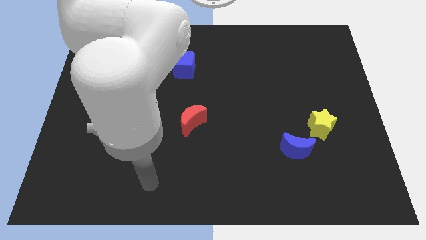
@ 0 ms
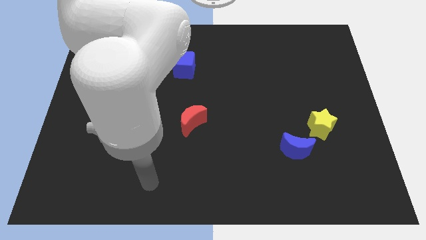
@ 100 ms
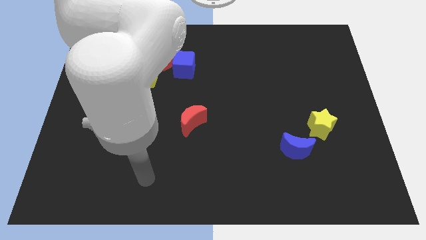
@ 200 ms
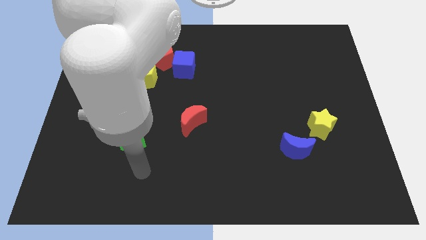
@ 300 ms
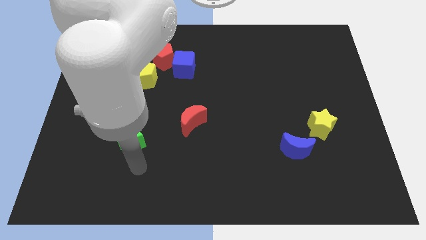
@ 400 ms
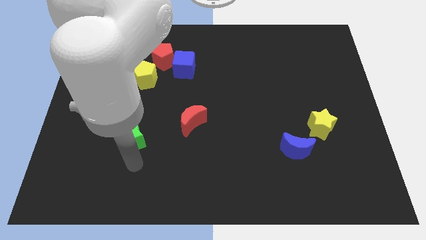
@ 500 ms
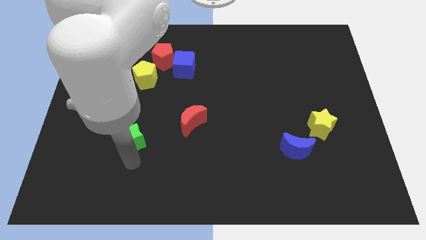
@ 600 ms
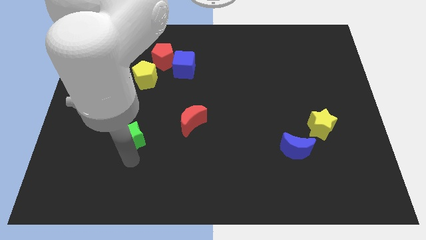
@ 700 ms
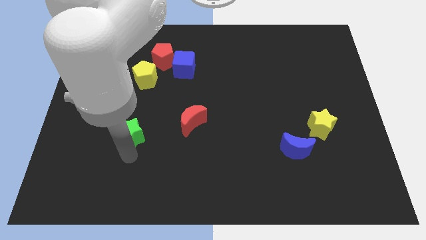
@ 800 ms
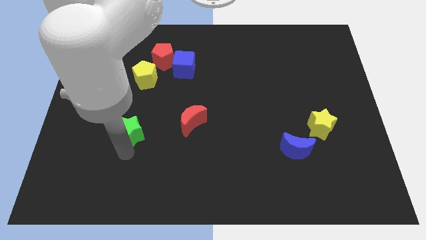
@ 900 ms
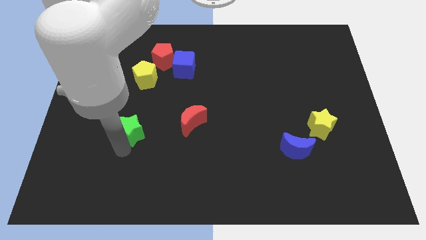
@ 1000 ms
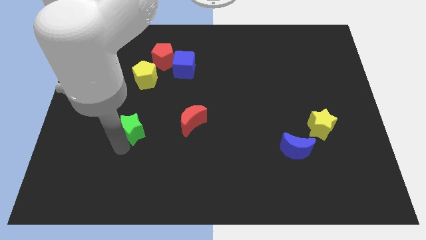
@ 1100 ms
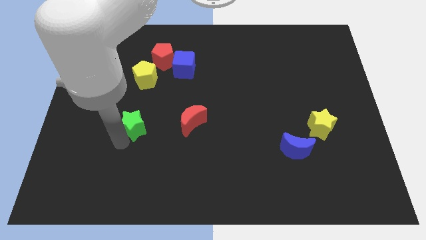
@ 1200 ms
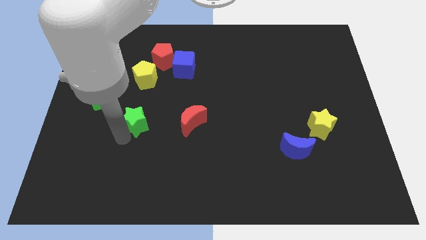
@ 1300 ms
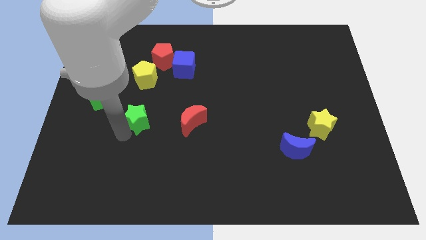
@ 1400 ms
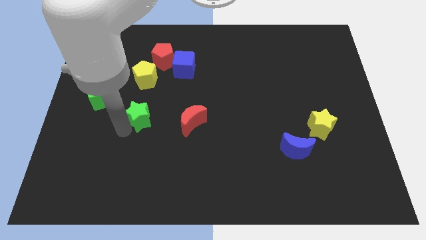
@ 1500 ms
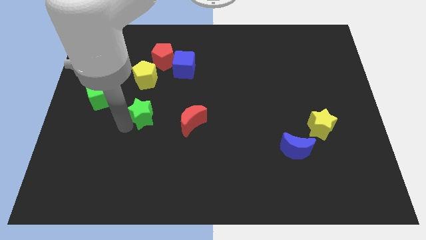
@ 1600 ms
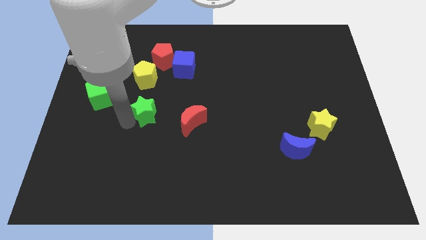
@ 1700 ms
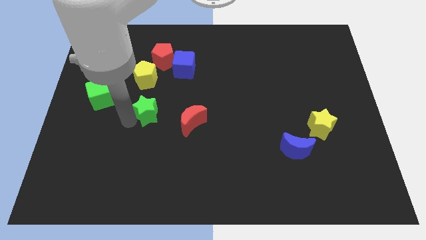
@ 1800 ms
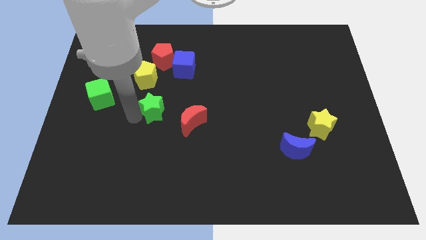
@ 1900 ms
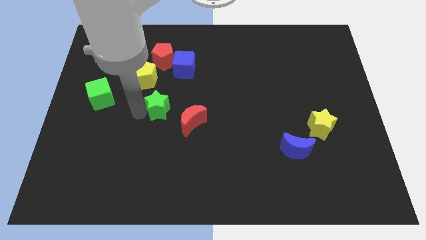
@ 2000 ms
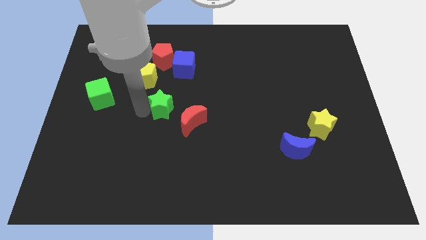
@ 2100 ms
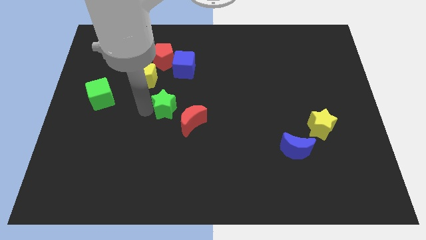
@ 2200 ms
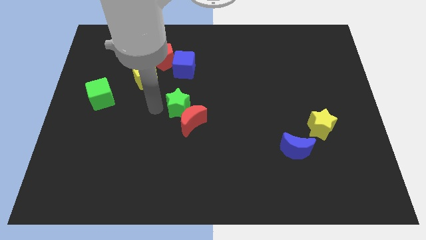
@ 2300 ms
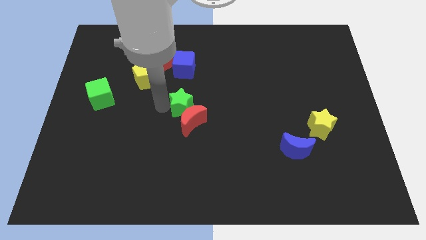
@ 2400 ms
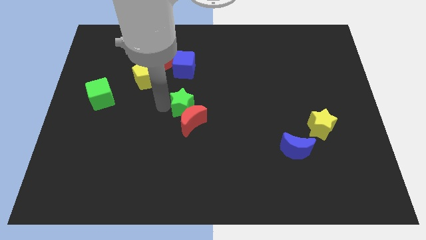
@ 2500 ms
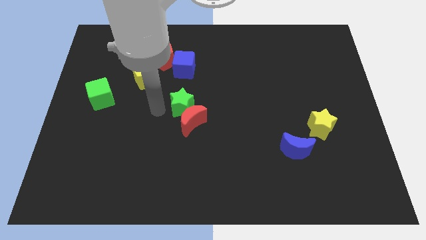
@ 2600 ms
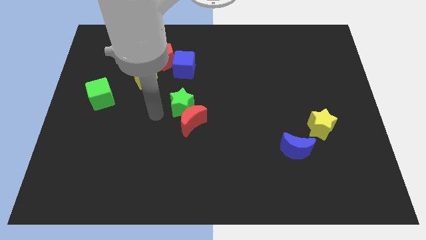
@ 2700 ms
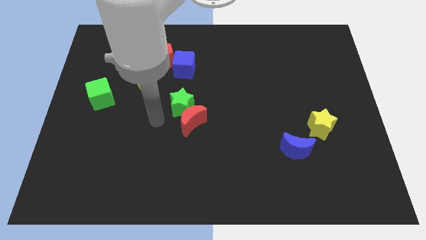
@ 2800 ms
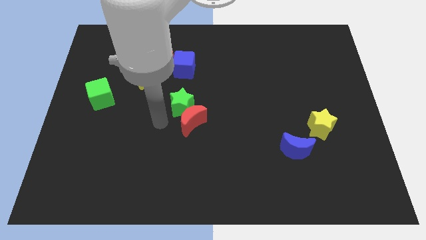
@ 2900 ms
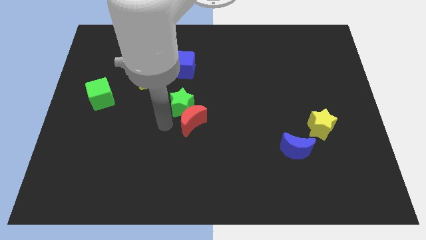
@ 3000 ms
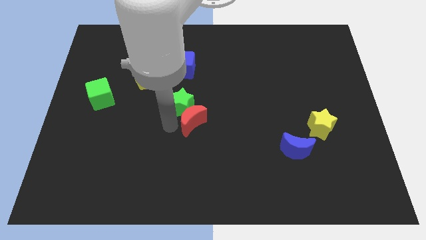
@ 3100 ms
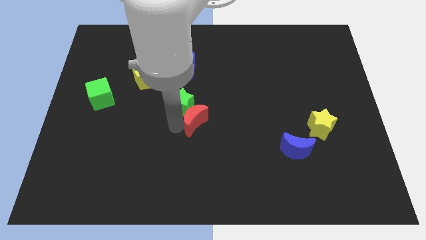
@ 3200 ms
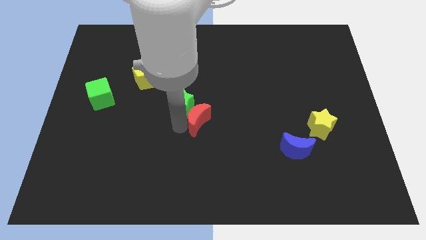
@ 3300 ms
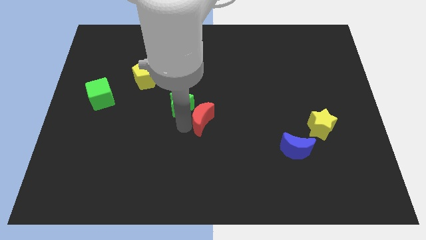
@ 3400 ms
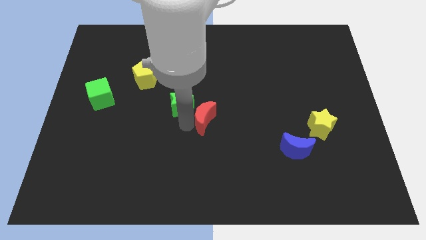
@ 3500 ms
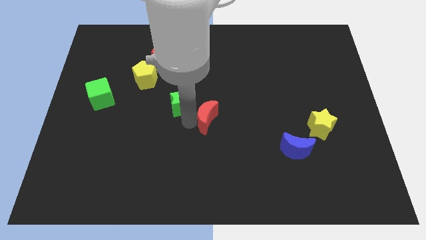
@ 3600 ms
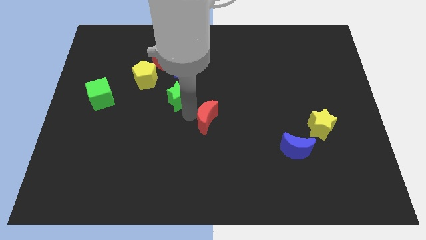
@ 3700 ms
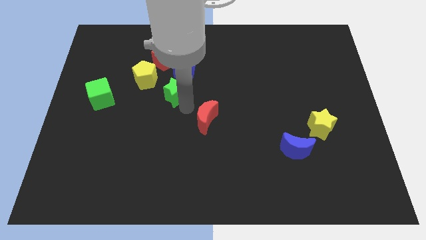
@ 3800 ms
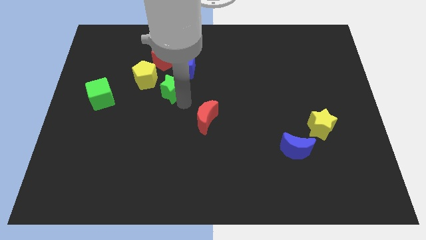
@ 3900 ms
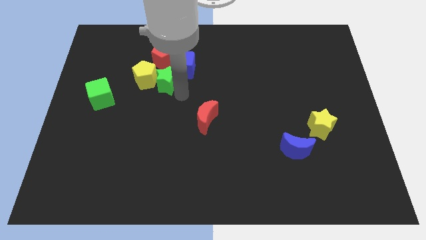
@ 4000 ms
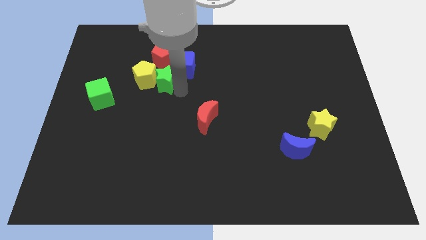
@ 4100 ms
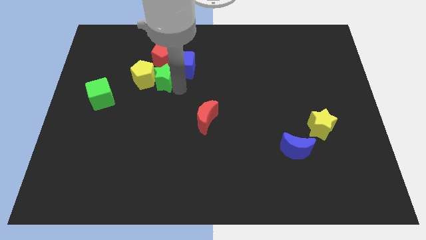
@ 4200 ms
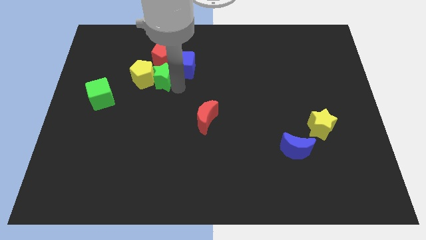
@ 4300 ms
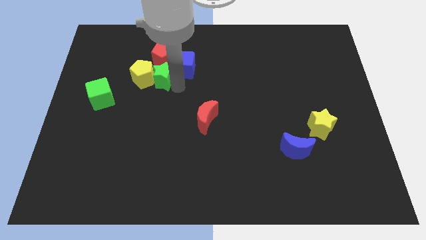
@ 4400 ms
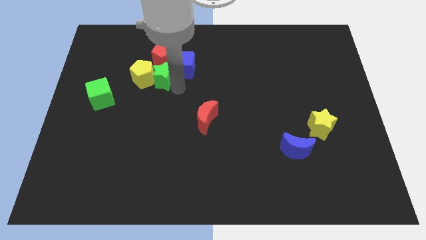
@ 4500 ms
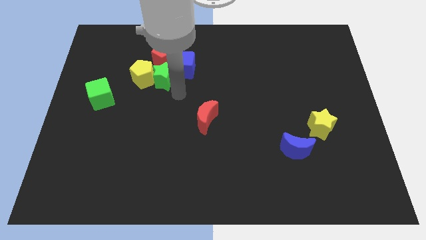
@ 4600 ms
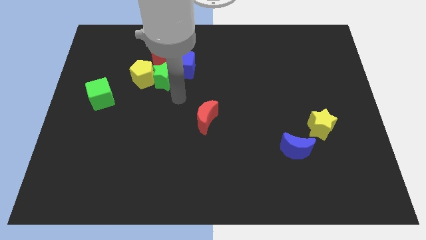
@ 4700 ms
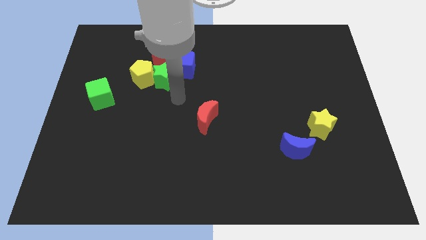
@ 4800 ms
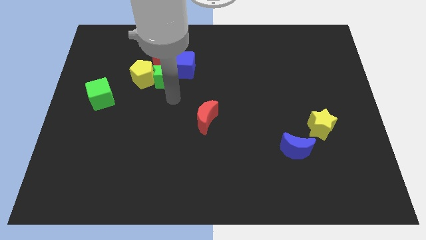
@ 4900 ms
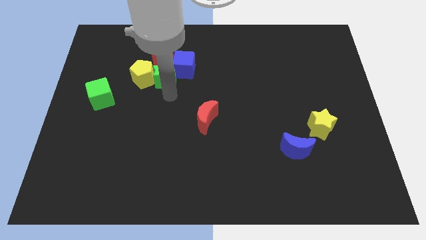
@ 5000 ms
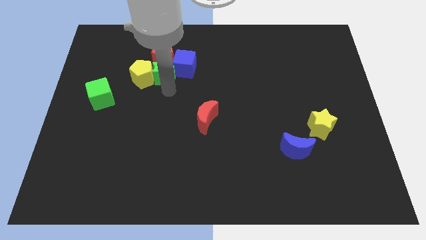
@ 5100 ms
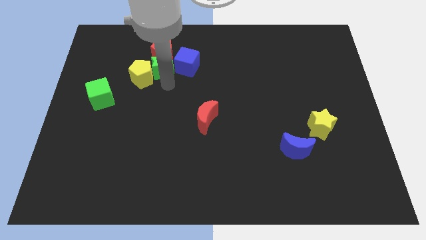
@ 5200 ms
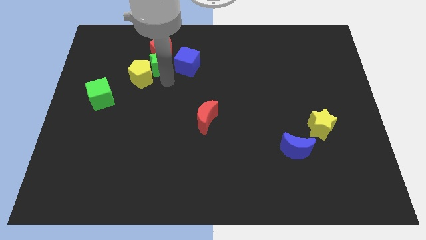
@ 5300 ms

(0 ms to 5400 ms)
put the green star to the red pentagon

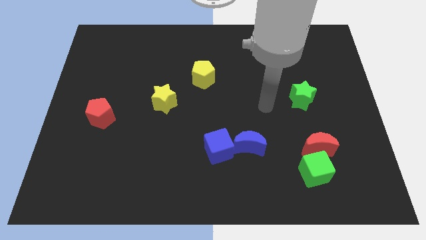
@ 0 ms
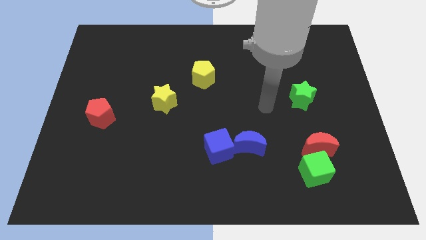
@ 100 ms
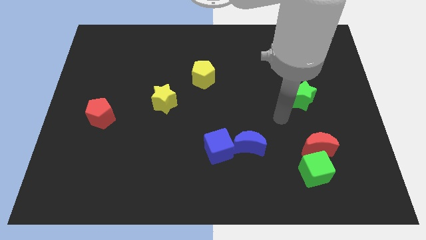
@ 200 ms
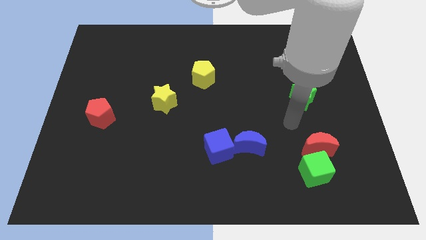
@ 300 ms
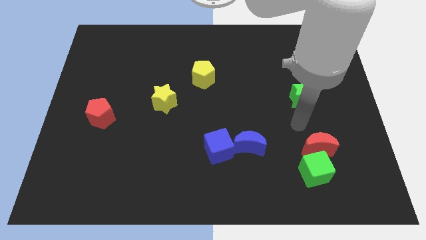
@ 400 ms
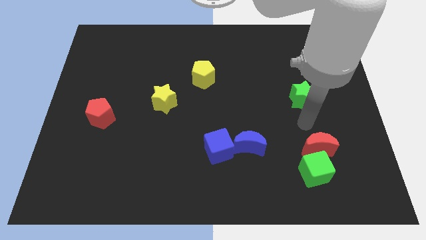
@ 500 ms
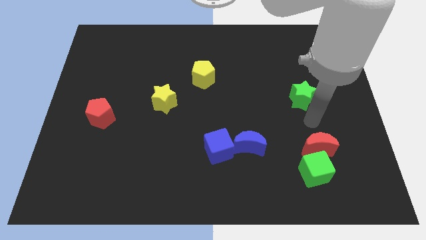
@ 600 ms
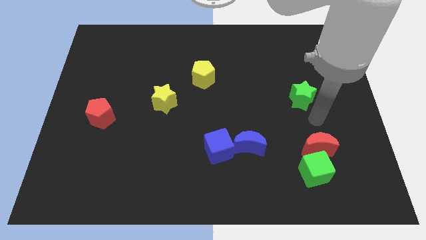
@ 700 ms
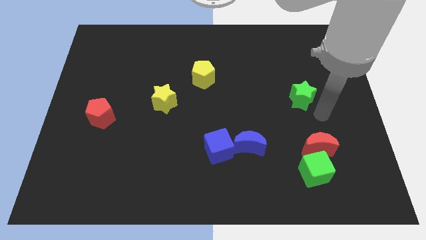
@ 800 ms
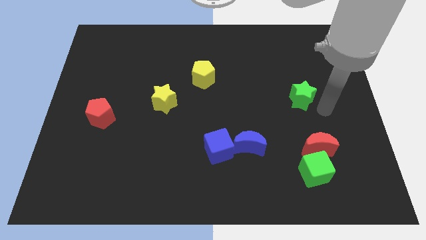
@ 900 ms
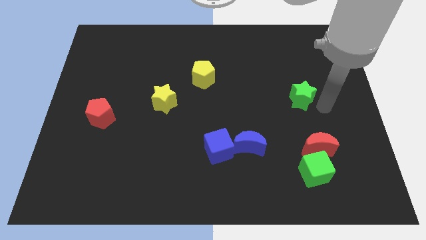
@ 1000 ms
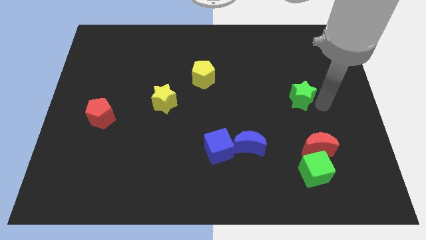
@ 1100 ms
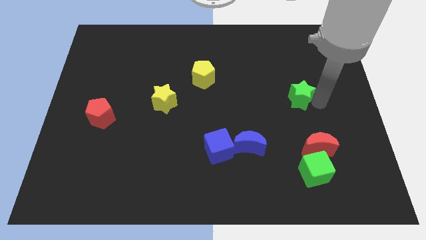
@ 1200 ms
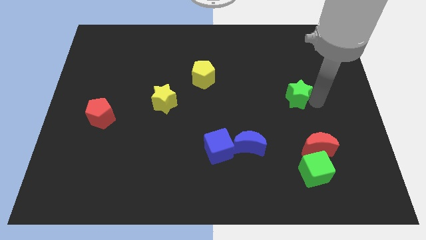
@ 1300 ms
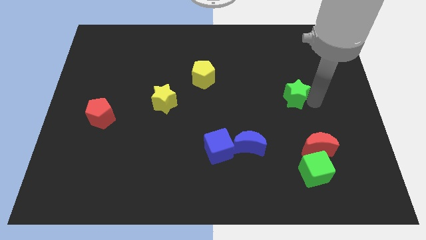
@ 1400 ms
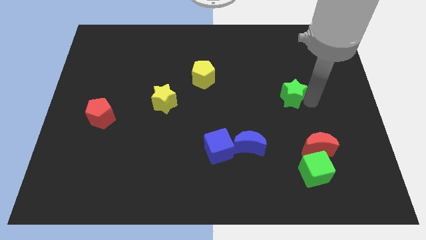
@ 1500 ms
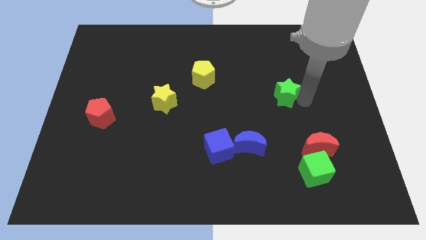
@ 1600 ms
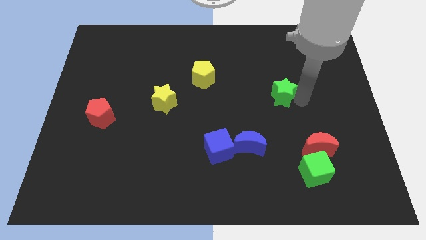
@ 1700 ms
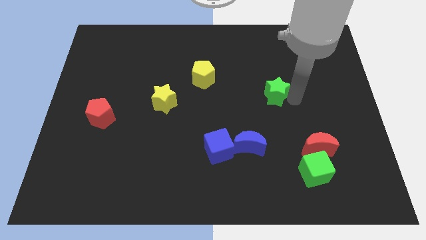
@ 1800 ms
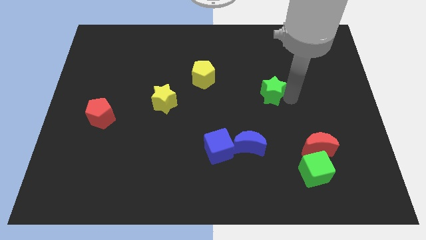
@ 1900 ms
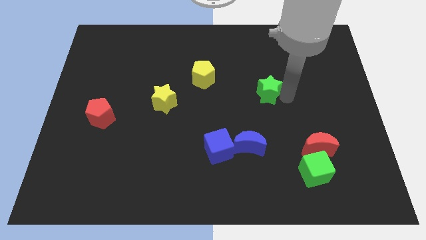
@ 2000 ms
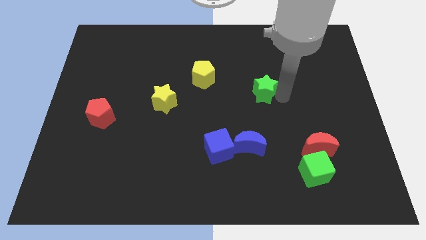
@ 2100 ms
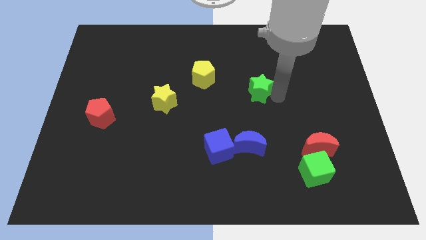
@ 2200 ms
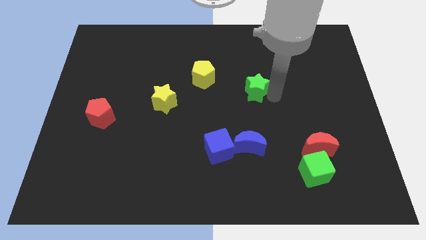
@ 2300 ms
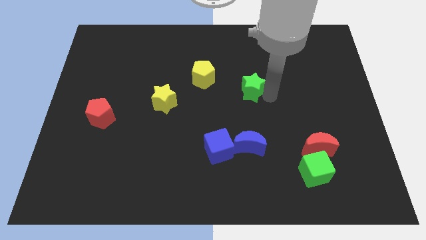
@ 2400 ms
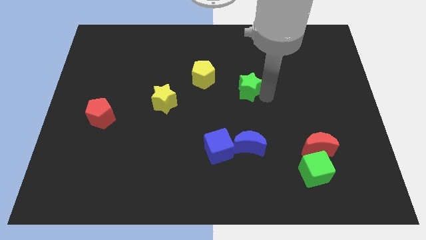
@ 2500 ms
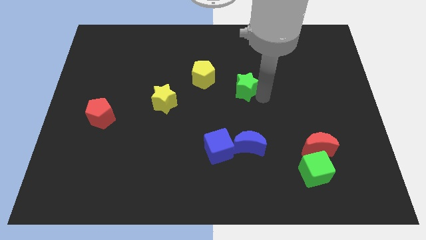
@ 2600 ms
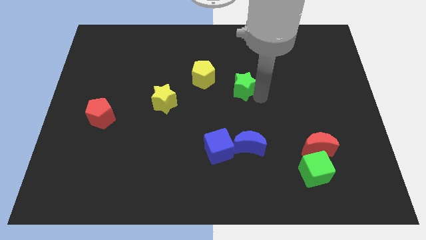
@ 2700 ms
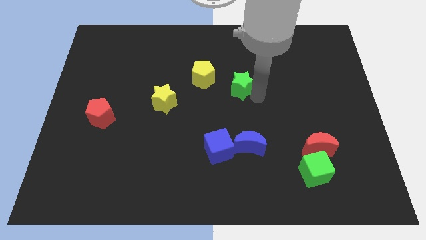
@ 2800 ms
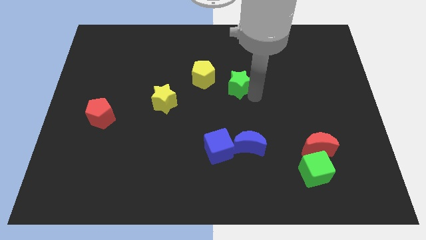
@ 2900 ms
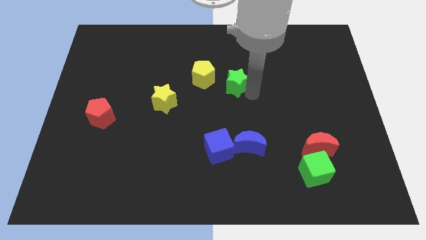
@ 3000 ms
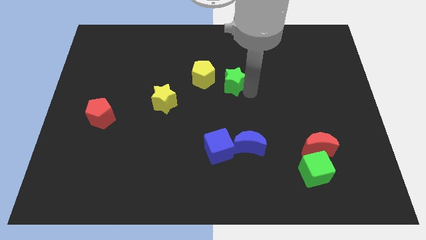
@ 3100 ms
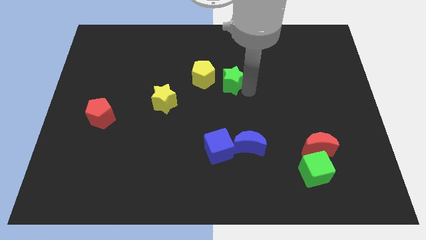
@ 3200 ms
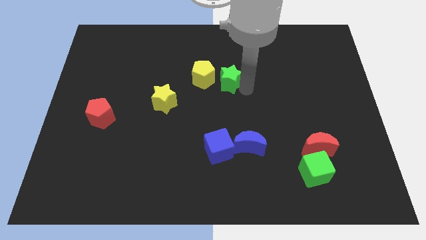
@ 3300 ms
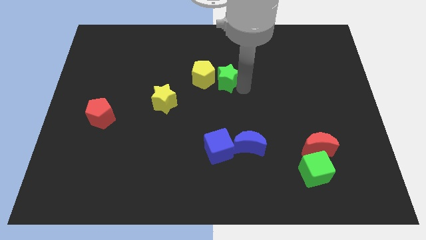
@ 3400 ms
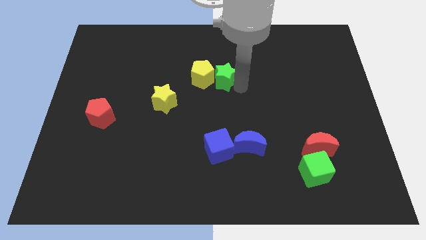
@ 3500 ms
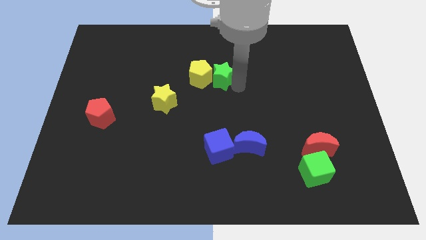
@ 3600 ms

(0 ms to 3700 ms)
slide the green star close to the yellow pentagon
